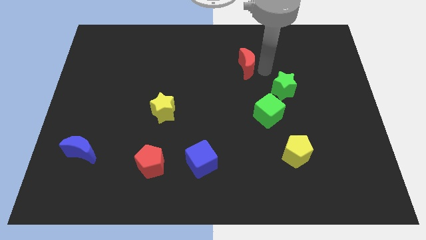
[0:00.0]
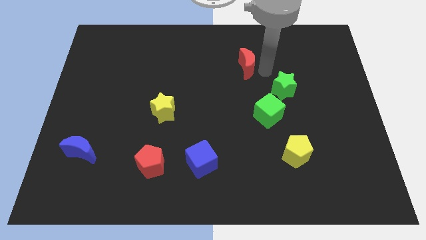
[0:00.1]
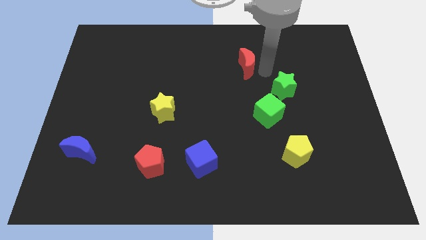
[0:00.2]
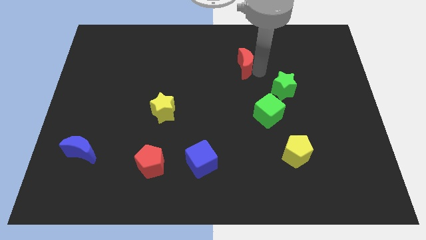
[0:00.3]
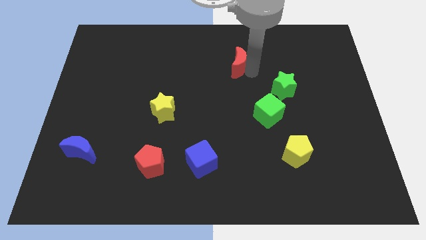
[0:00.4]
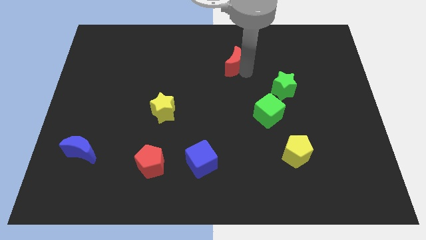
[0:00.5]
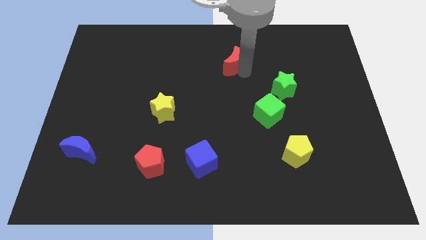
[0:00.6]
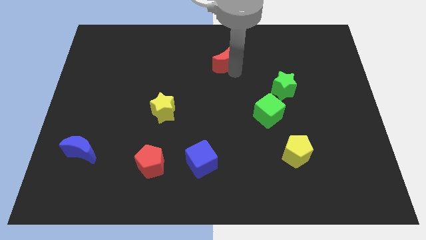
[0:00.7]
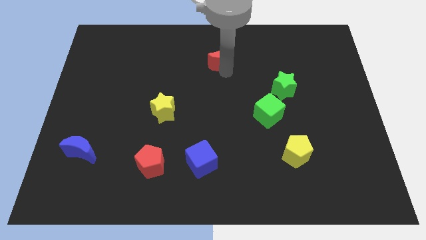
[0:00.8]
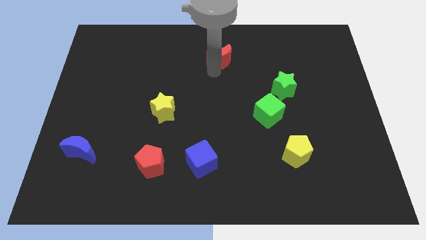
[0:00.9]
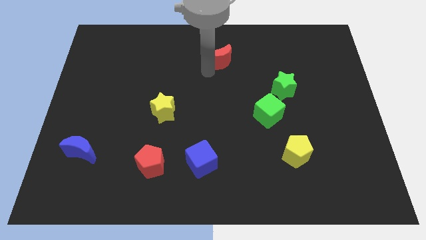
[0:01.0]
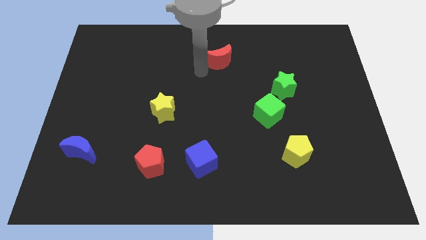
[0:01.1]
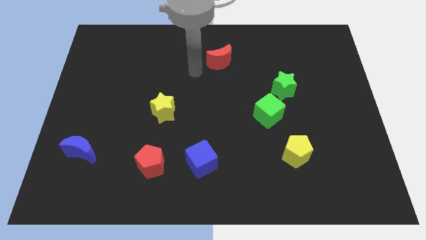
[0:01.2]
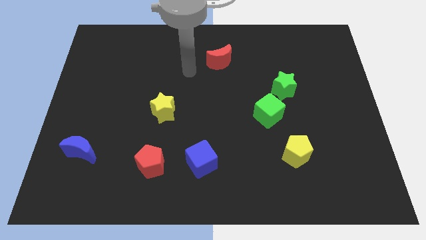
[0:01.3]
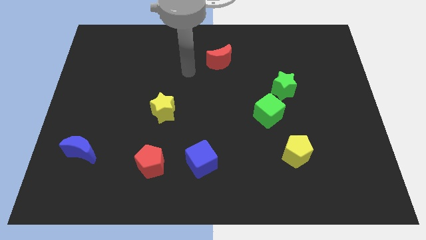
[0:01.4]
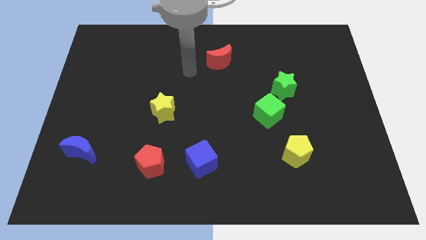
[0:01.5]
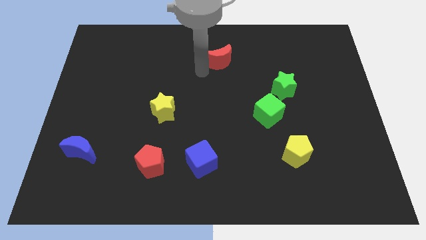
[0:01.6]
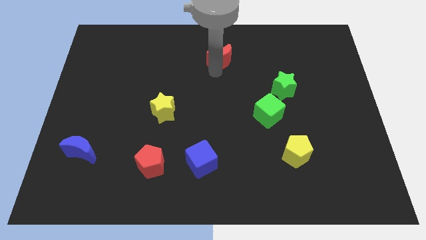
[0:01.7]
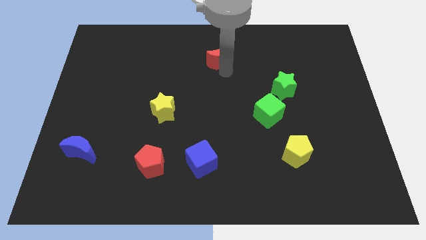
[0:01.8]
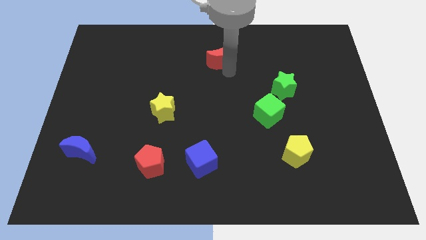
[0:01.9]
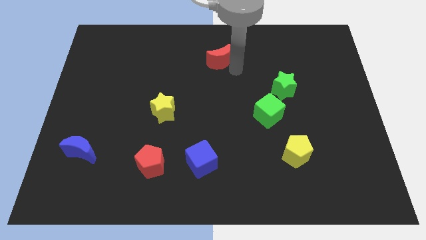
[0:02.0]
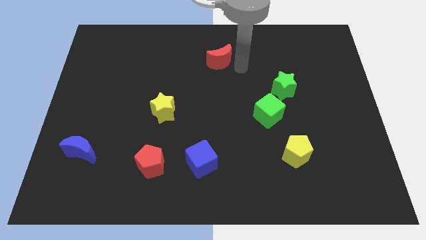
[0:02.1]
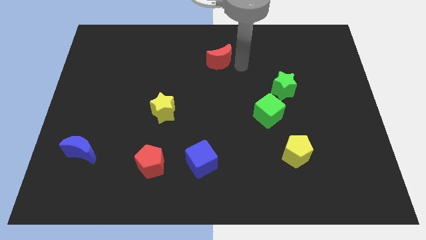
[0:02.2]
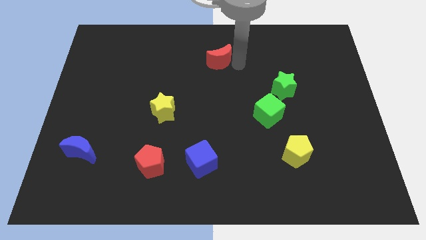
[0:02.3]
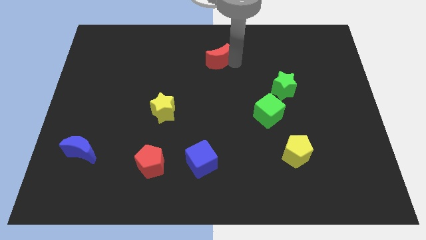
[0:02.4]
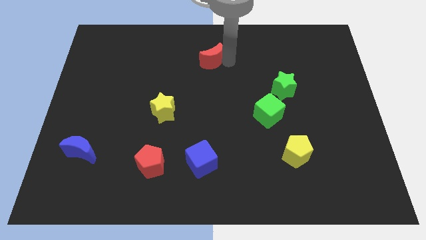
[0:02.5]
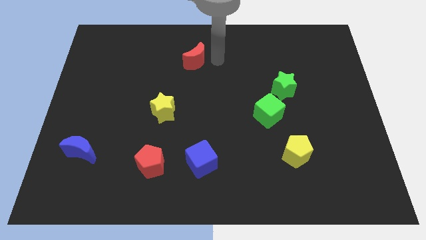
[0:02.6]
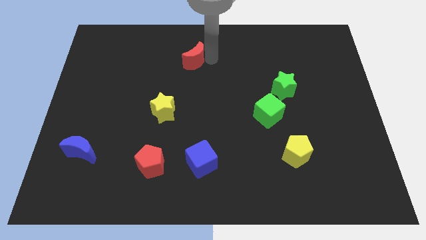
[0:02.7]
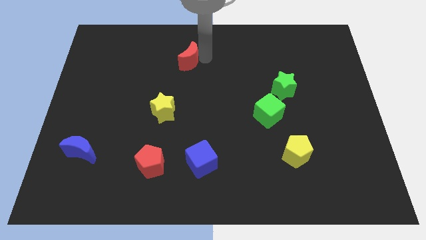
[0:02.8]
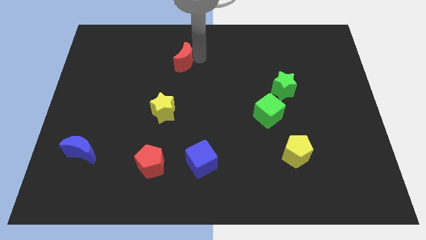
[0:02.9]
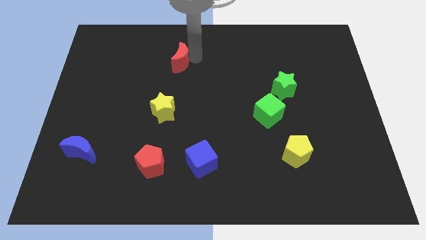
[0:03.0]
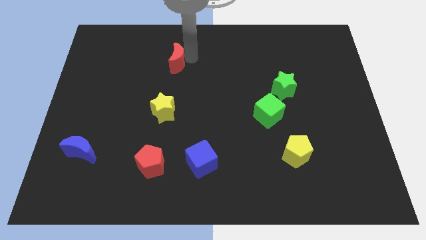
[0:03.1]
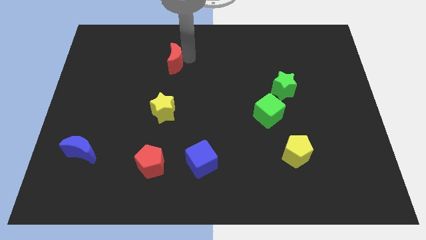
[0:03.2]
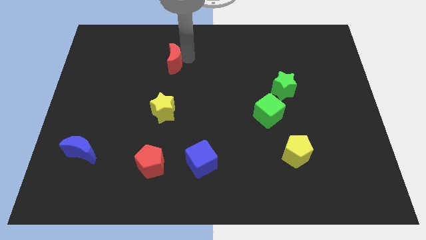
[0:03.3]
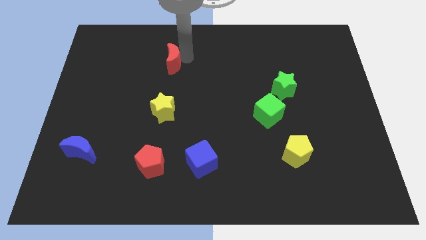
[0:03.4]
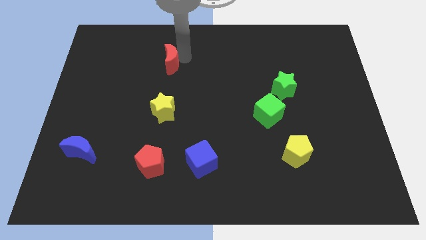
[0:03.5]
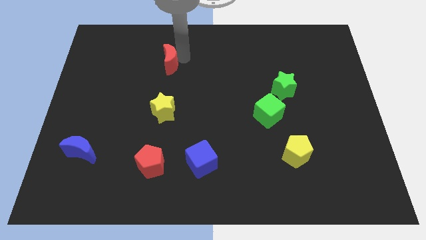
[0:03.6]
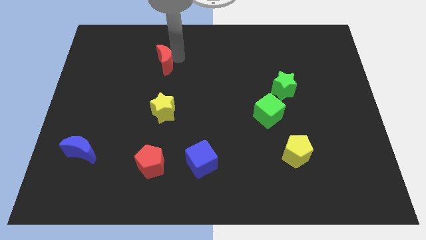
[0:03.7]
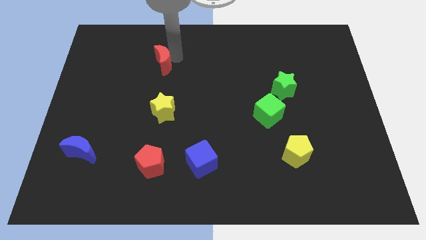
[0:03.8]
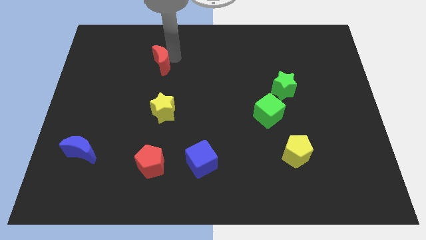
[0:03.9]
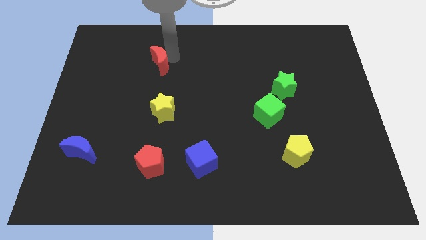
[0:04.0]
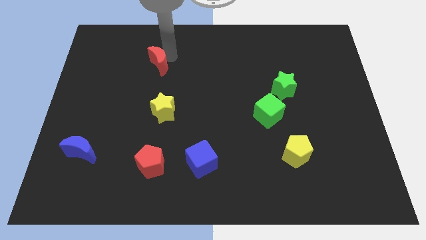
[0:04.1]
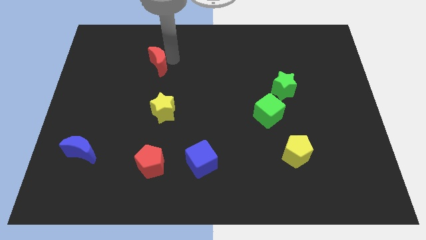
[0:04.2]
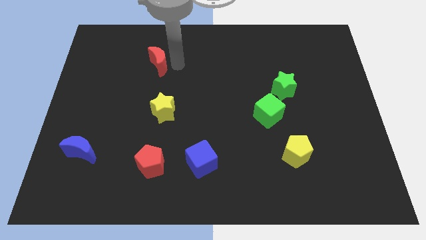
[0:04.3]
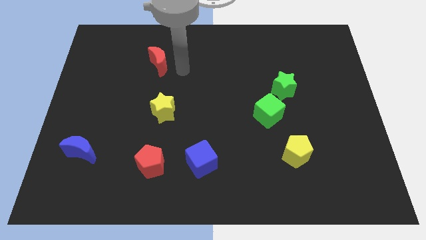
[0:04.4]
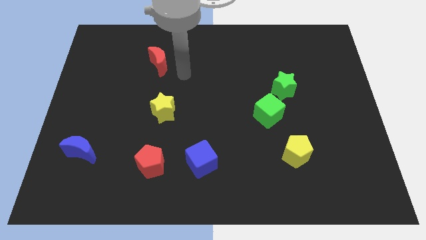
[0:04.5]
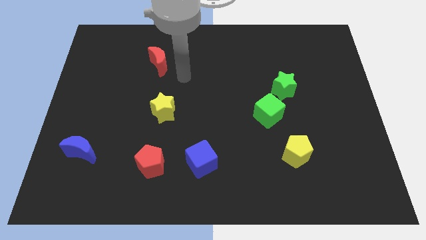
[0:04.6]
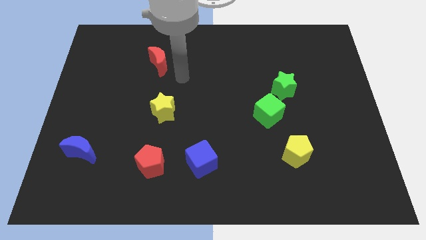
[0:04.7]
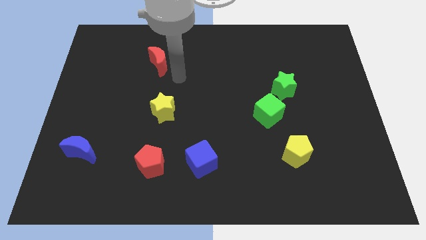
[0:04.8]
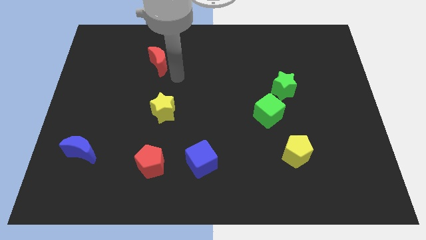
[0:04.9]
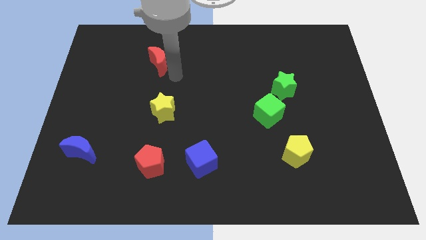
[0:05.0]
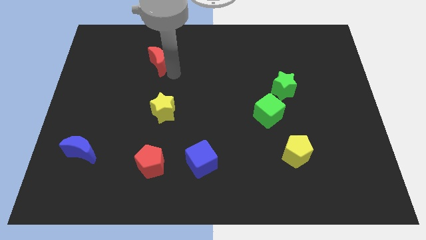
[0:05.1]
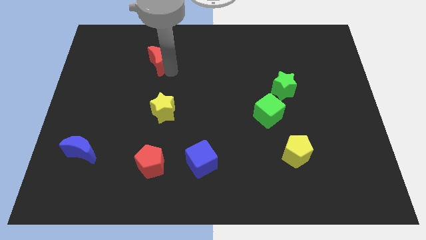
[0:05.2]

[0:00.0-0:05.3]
move red moon above yellow star

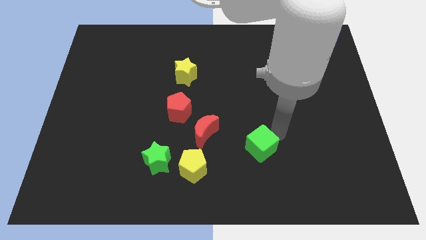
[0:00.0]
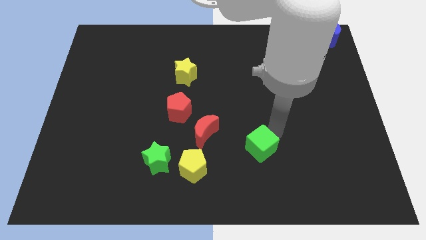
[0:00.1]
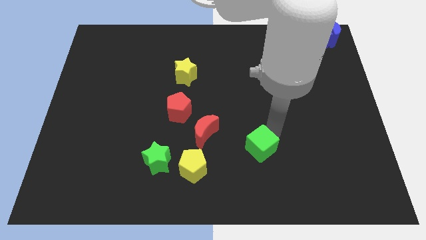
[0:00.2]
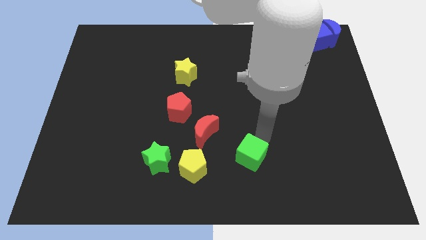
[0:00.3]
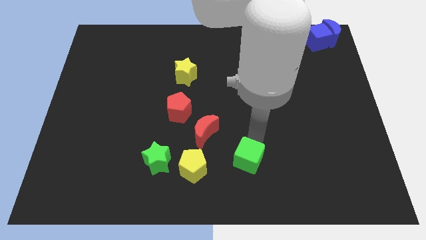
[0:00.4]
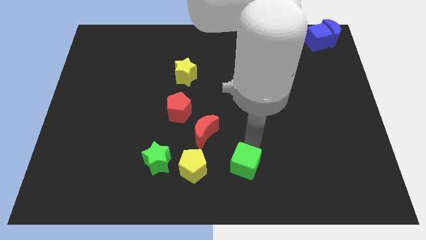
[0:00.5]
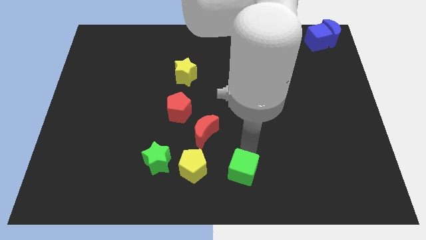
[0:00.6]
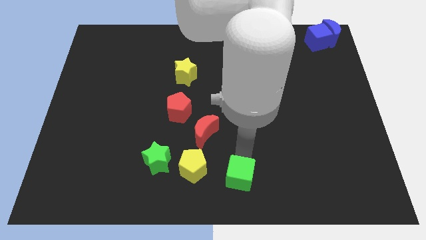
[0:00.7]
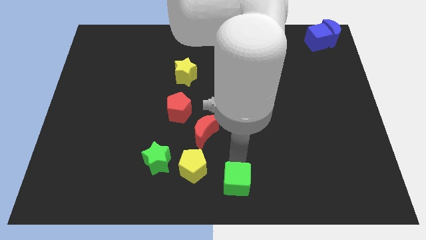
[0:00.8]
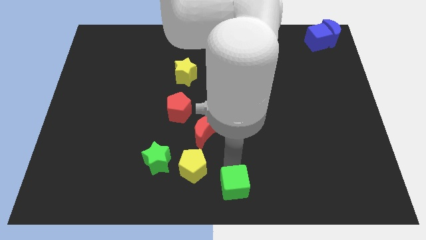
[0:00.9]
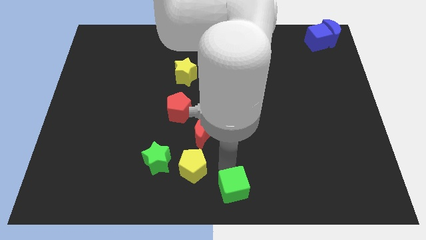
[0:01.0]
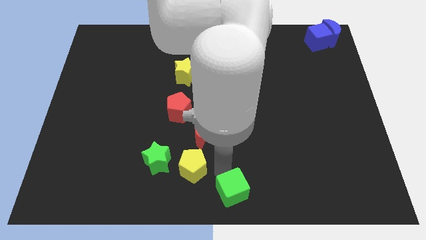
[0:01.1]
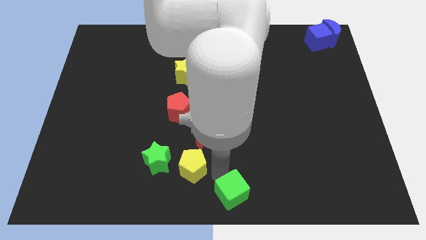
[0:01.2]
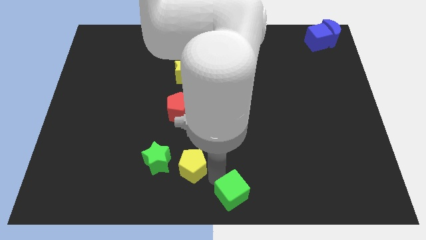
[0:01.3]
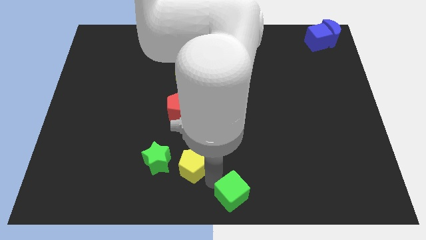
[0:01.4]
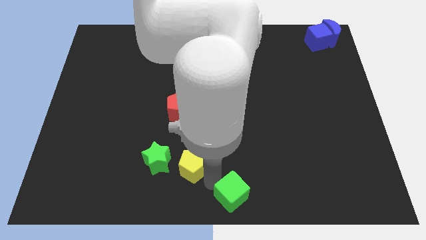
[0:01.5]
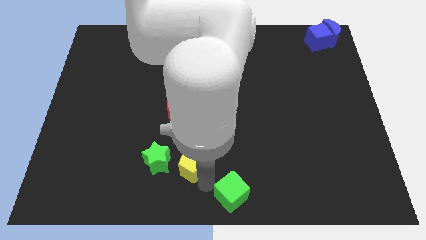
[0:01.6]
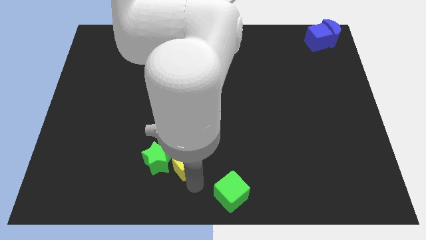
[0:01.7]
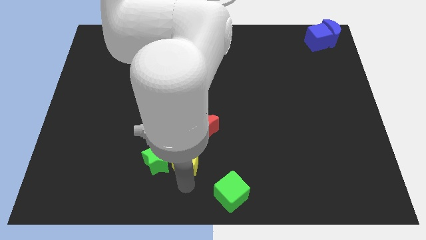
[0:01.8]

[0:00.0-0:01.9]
push green cube to the bottom center sark

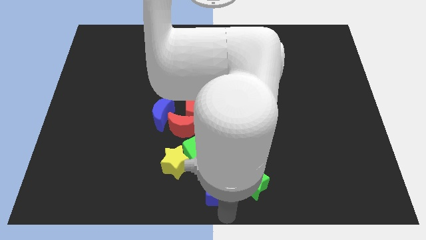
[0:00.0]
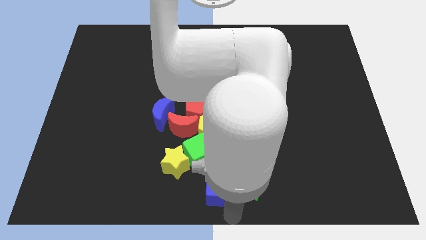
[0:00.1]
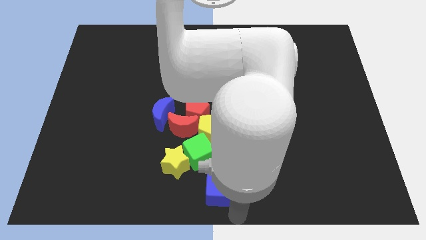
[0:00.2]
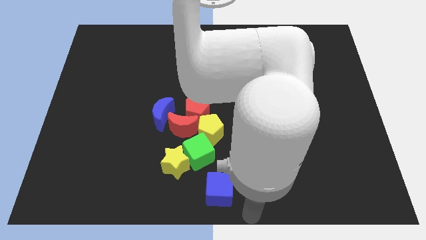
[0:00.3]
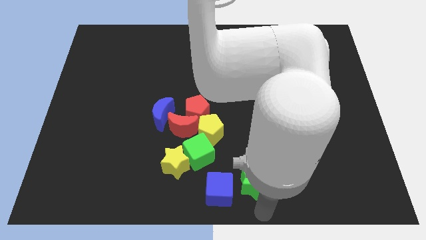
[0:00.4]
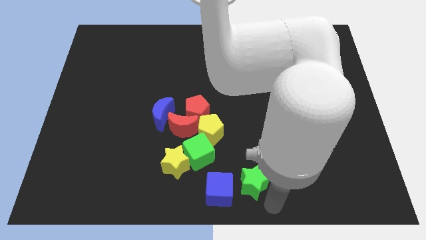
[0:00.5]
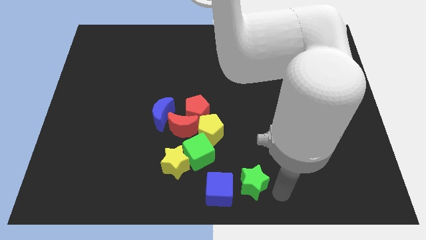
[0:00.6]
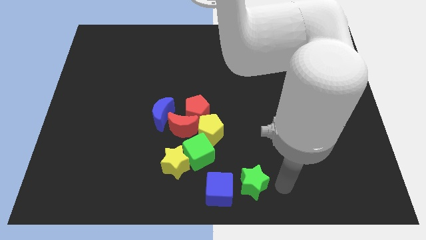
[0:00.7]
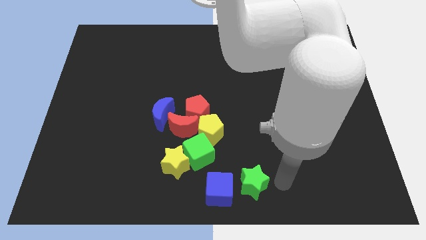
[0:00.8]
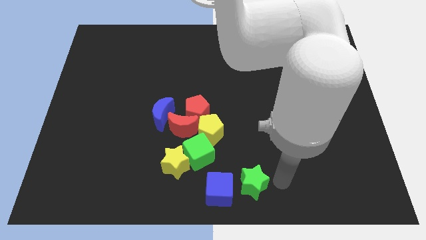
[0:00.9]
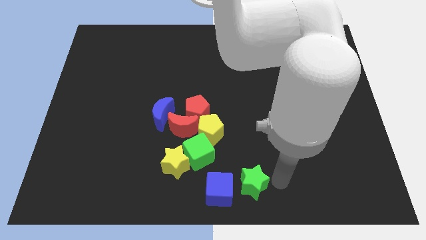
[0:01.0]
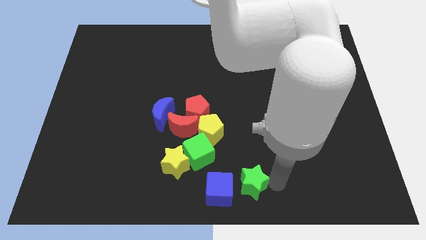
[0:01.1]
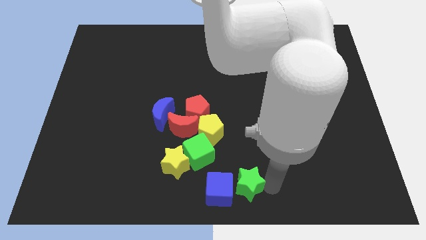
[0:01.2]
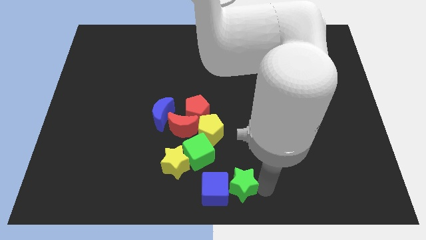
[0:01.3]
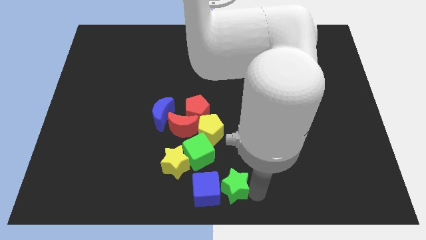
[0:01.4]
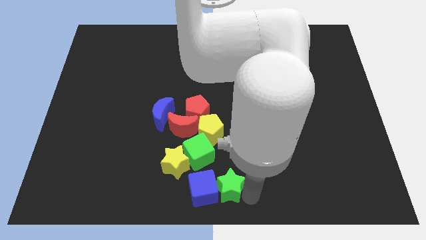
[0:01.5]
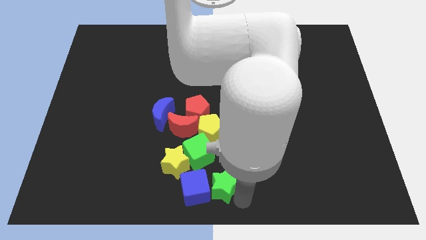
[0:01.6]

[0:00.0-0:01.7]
slide the green star into the right side of the blue cube
